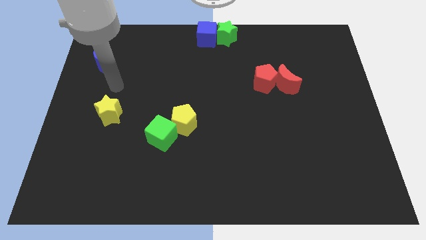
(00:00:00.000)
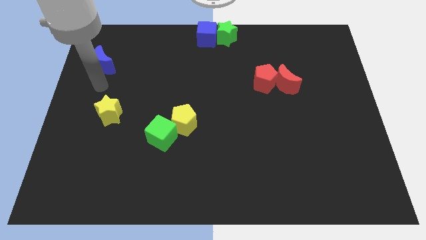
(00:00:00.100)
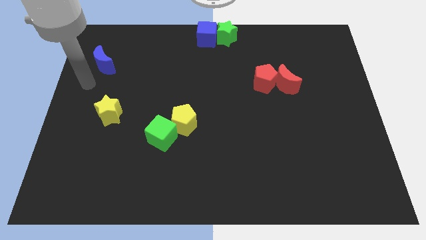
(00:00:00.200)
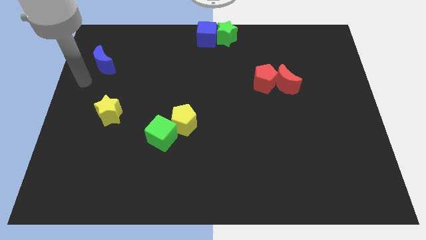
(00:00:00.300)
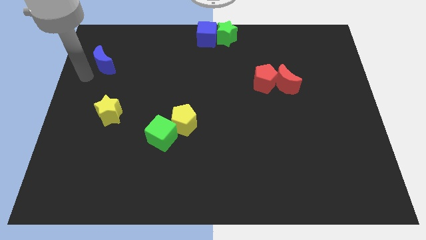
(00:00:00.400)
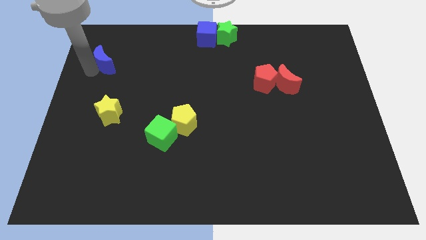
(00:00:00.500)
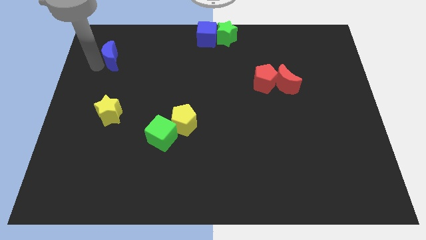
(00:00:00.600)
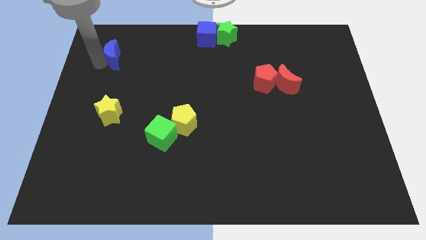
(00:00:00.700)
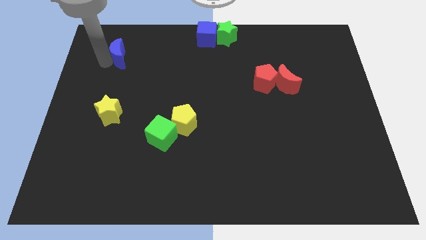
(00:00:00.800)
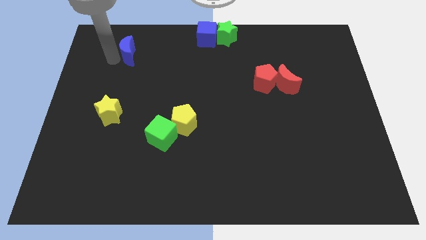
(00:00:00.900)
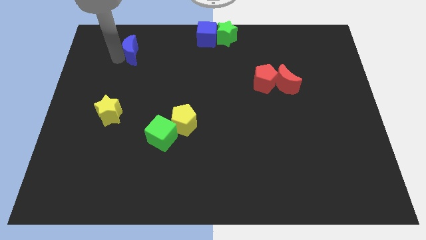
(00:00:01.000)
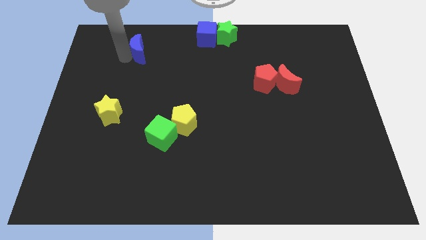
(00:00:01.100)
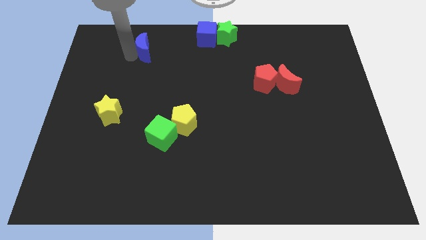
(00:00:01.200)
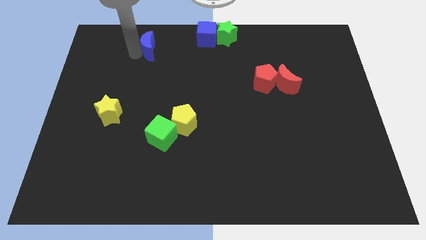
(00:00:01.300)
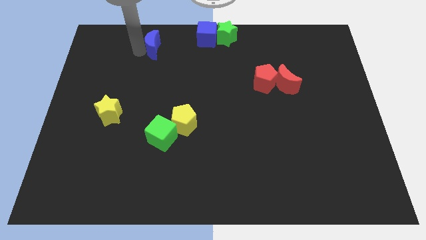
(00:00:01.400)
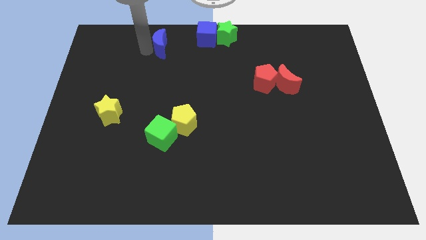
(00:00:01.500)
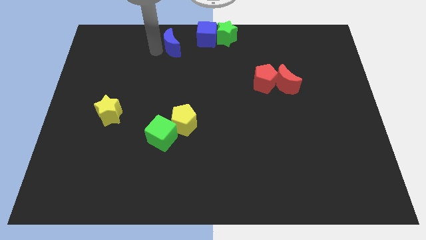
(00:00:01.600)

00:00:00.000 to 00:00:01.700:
move the blue moon towards the blue cube

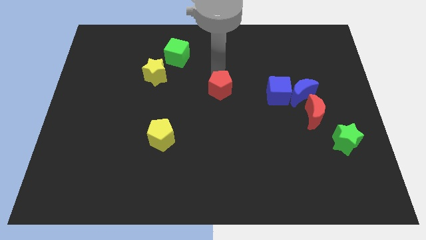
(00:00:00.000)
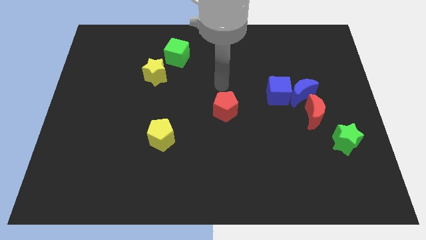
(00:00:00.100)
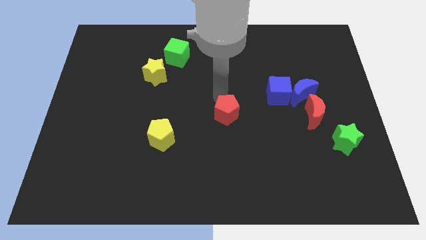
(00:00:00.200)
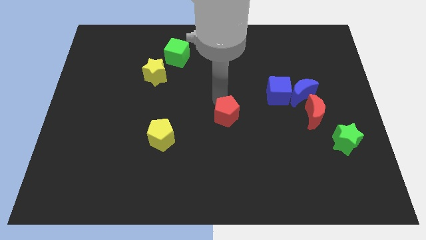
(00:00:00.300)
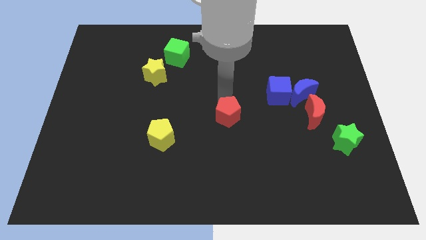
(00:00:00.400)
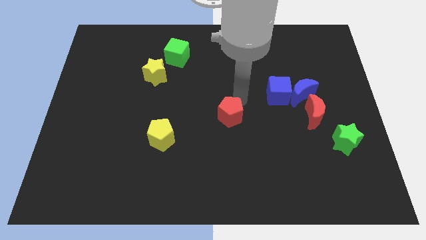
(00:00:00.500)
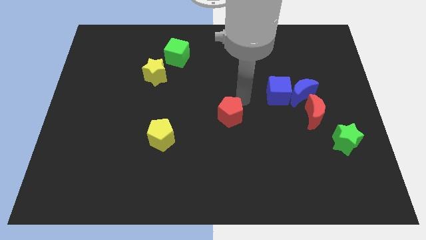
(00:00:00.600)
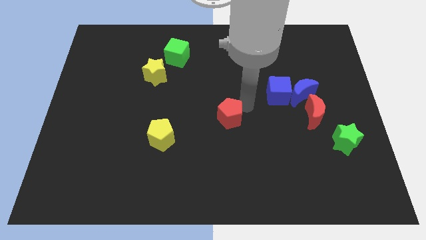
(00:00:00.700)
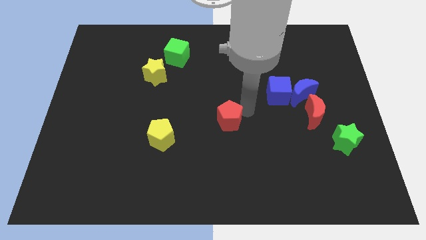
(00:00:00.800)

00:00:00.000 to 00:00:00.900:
place the red pentagon at the center of the board

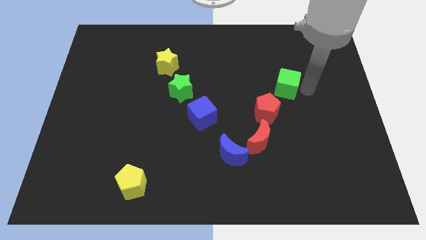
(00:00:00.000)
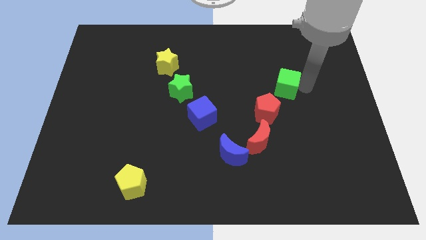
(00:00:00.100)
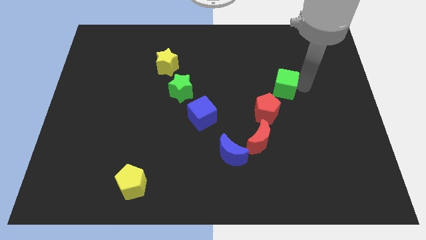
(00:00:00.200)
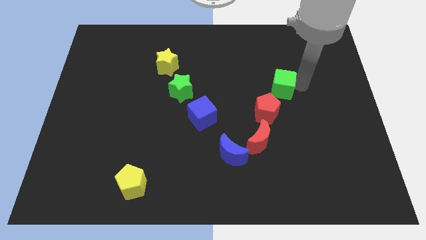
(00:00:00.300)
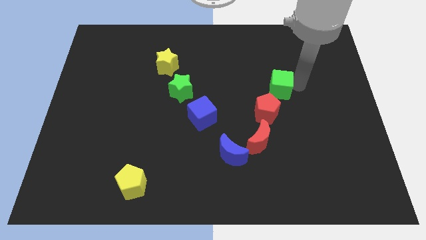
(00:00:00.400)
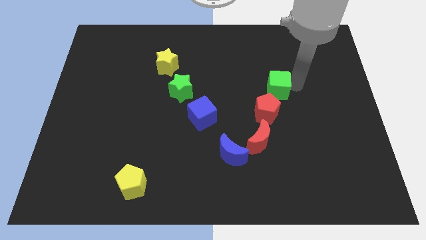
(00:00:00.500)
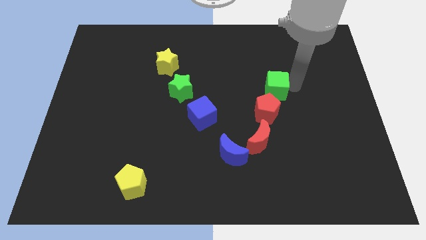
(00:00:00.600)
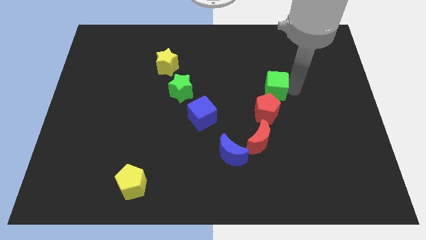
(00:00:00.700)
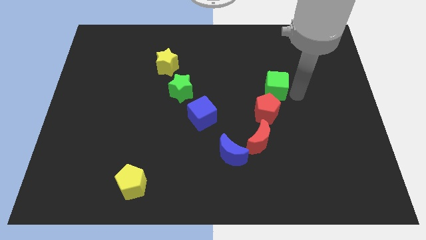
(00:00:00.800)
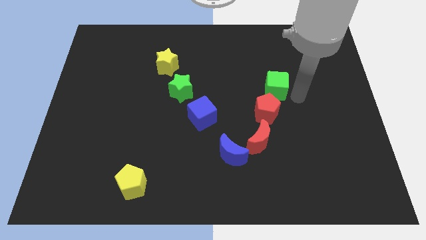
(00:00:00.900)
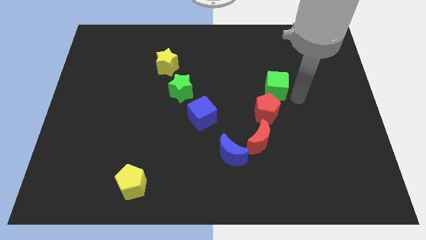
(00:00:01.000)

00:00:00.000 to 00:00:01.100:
put the green cube above the red pentagon

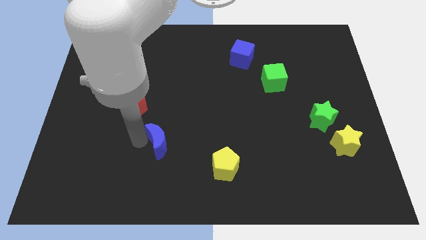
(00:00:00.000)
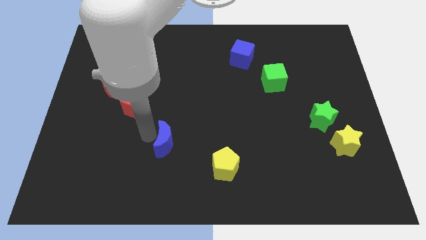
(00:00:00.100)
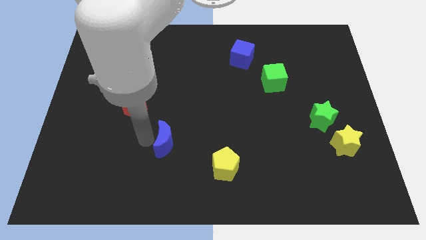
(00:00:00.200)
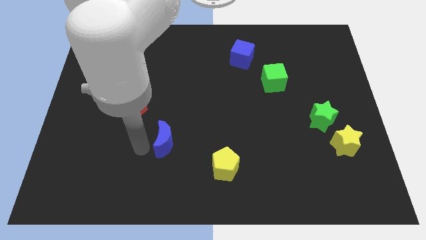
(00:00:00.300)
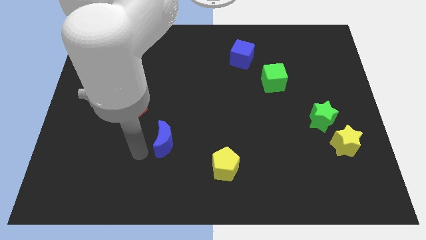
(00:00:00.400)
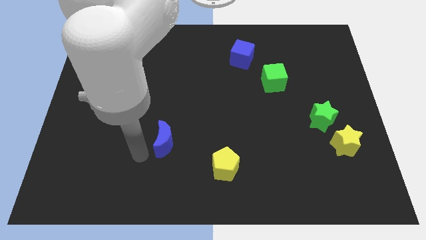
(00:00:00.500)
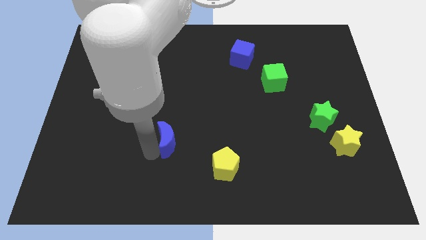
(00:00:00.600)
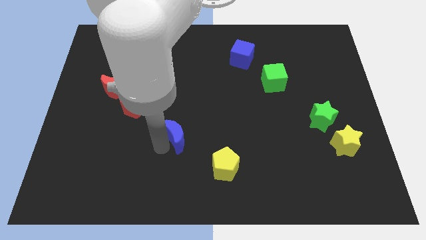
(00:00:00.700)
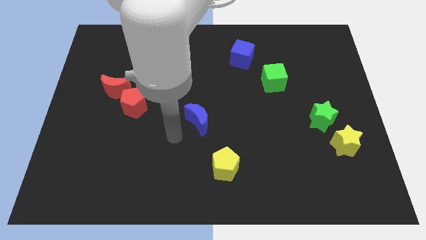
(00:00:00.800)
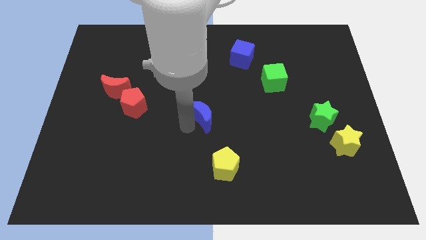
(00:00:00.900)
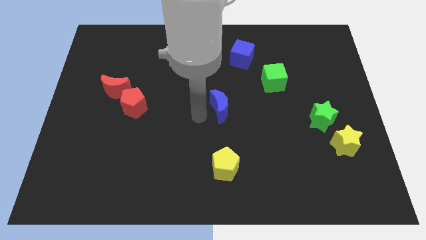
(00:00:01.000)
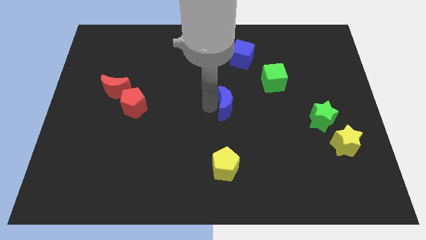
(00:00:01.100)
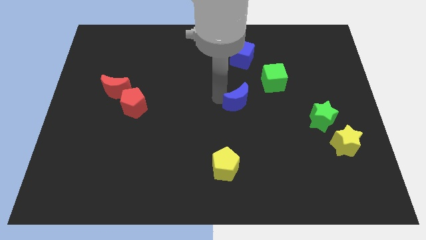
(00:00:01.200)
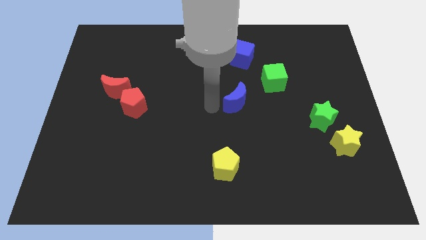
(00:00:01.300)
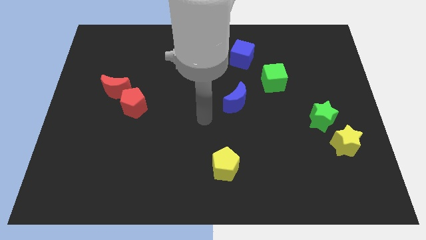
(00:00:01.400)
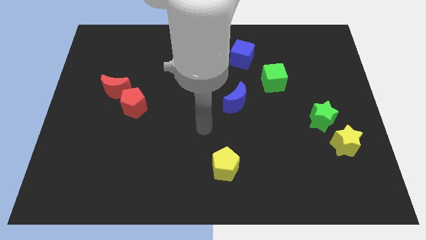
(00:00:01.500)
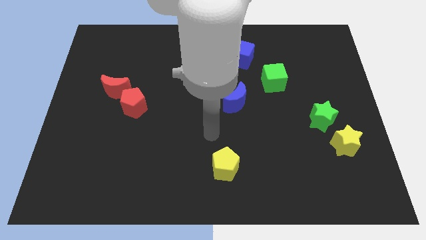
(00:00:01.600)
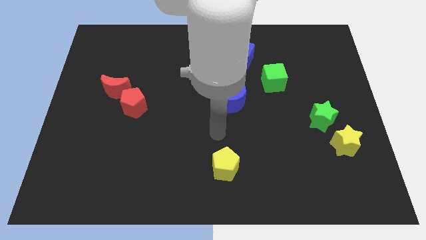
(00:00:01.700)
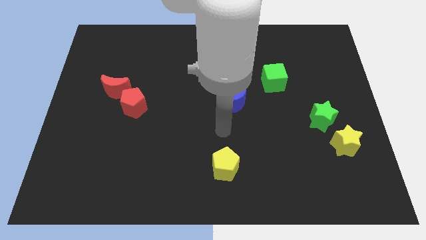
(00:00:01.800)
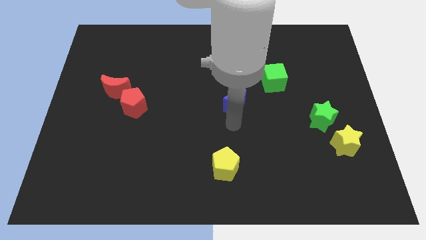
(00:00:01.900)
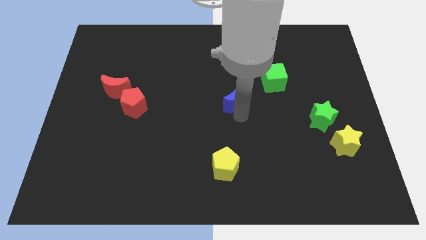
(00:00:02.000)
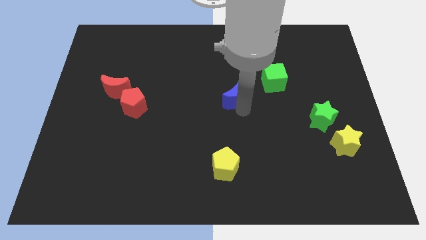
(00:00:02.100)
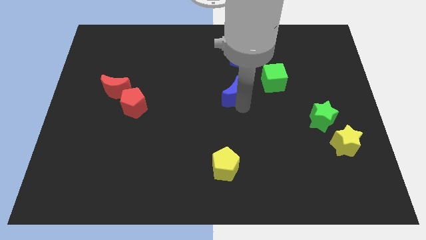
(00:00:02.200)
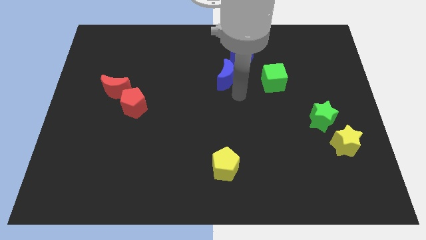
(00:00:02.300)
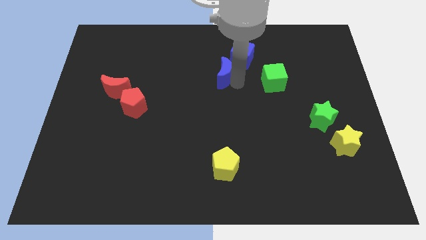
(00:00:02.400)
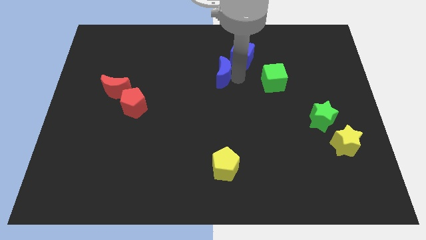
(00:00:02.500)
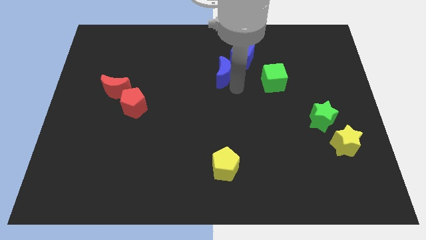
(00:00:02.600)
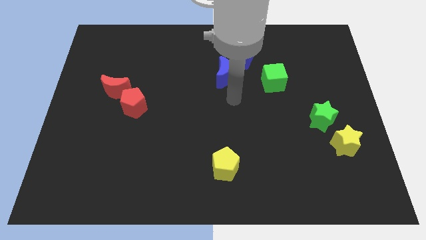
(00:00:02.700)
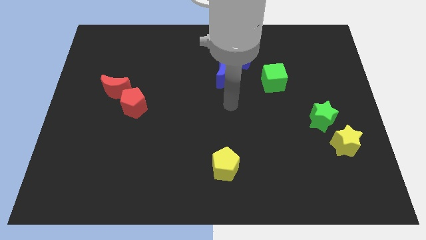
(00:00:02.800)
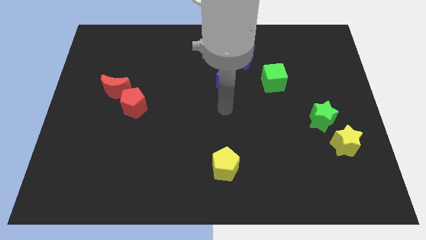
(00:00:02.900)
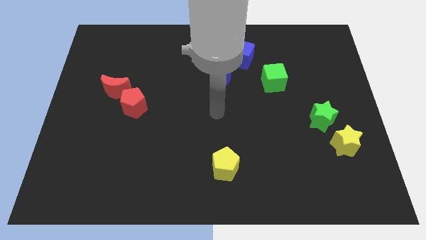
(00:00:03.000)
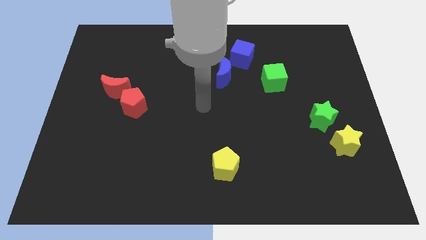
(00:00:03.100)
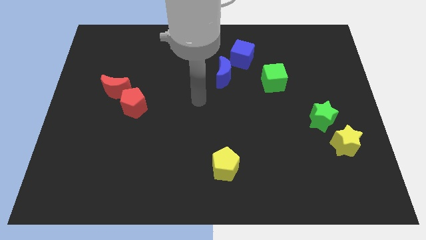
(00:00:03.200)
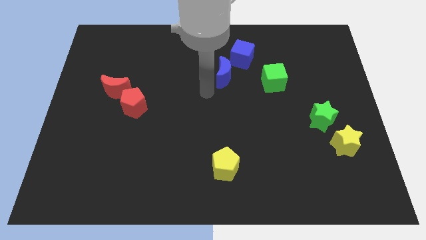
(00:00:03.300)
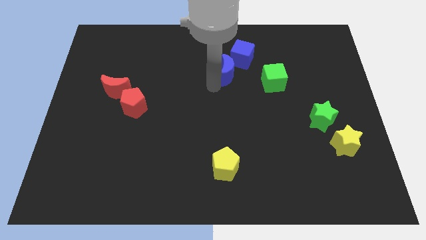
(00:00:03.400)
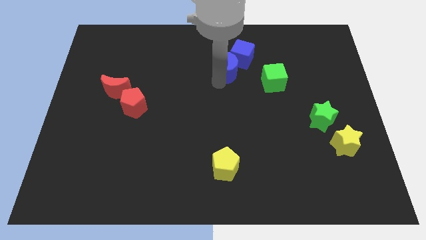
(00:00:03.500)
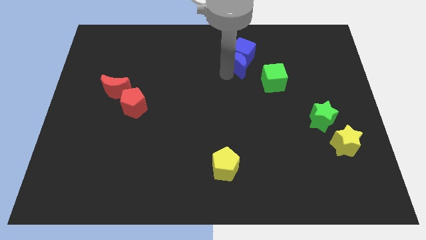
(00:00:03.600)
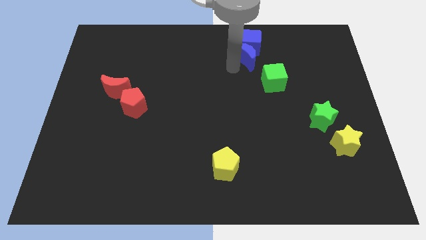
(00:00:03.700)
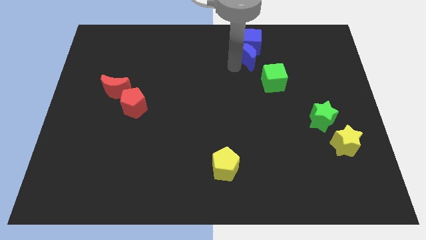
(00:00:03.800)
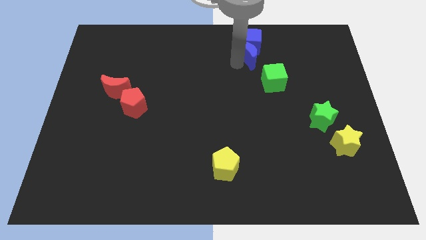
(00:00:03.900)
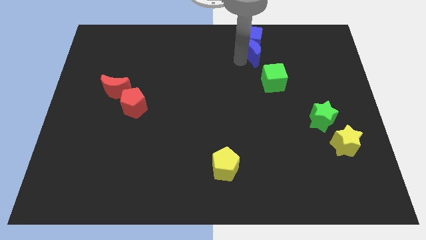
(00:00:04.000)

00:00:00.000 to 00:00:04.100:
move blue moon into blue cube

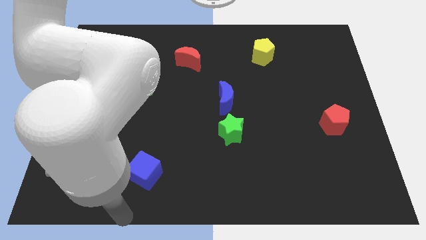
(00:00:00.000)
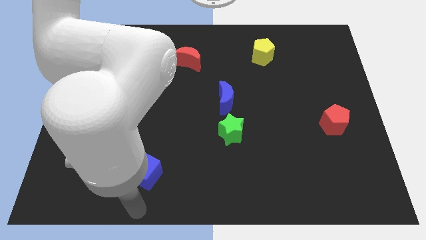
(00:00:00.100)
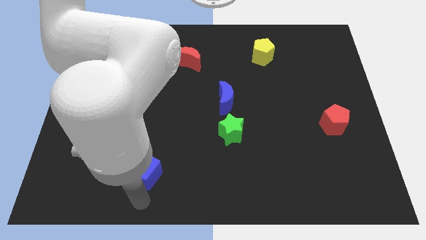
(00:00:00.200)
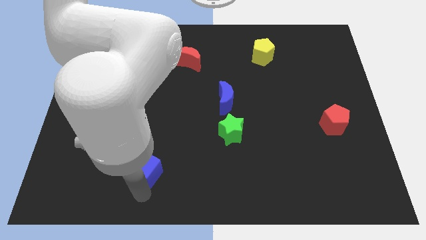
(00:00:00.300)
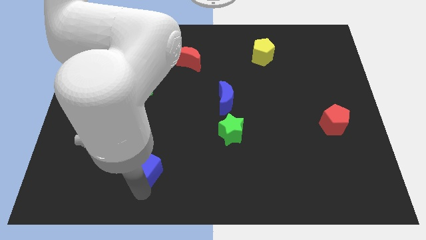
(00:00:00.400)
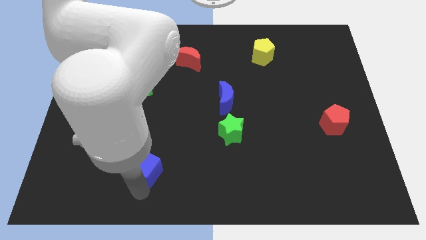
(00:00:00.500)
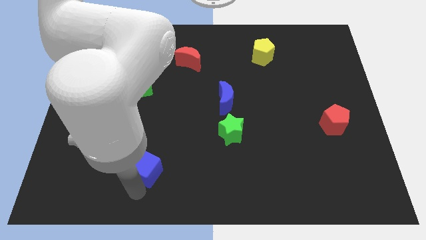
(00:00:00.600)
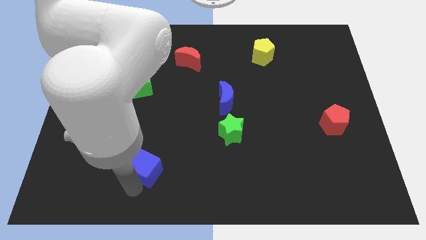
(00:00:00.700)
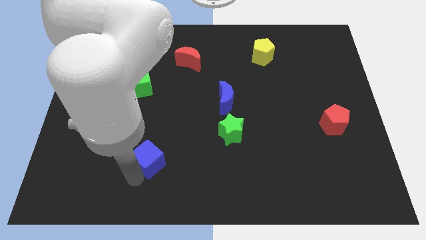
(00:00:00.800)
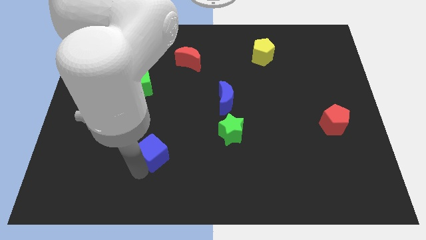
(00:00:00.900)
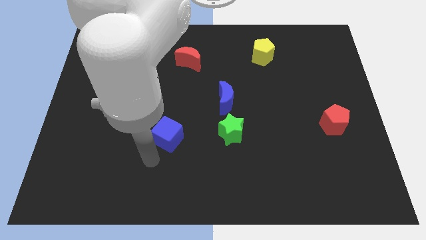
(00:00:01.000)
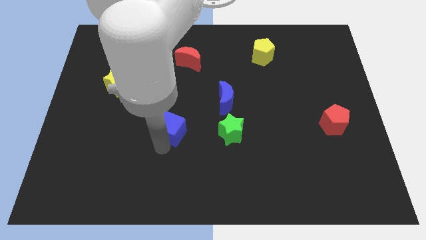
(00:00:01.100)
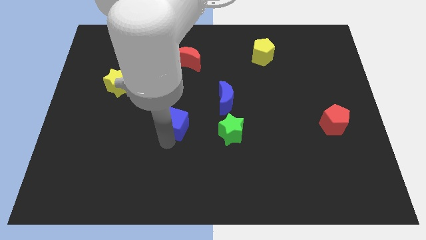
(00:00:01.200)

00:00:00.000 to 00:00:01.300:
move blue moon left beside the green star
